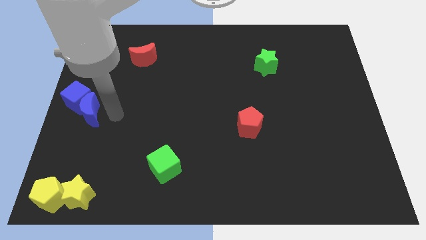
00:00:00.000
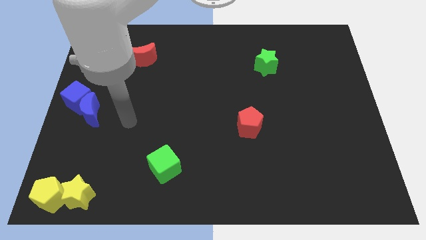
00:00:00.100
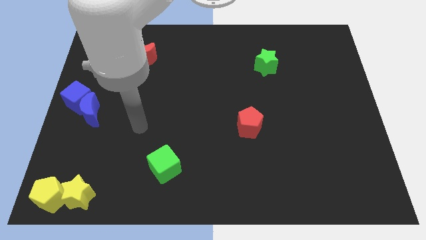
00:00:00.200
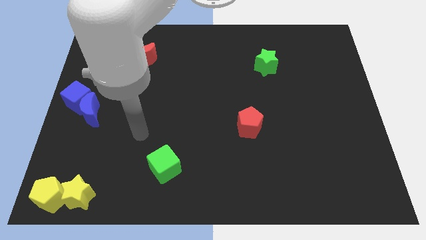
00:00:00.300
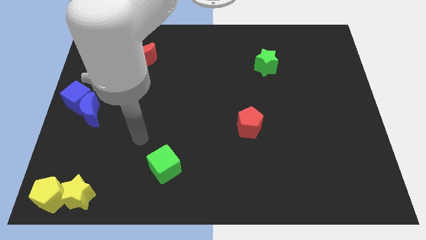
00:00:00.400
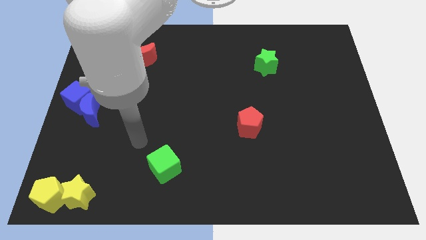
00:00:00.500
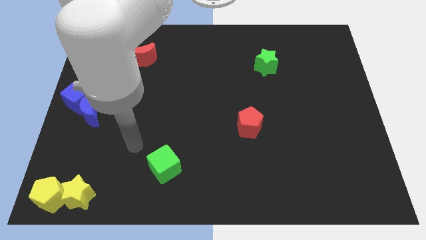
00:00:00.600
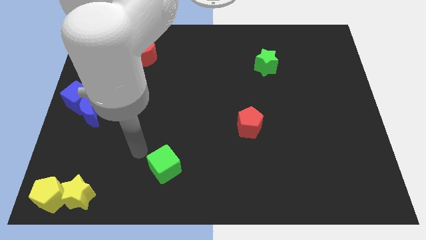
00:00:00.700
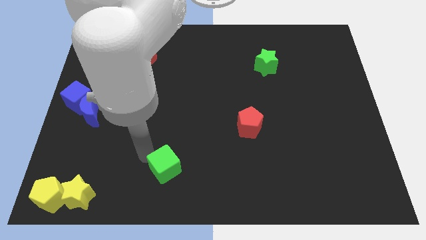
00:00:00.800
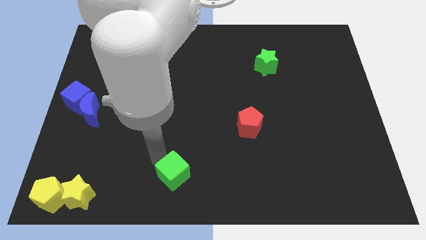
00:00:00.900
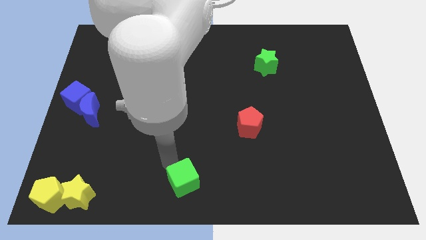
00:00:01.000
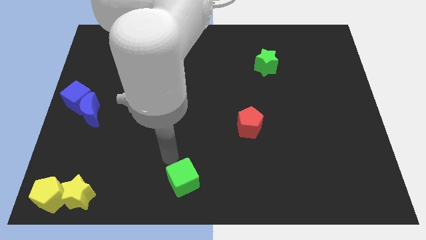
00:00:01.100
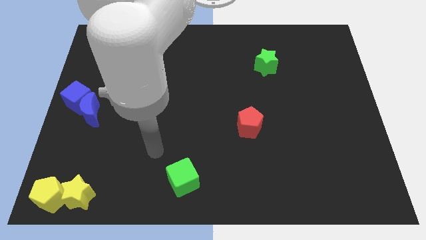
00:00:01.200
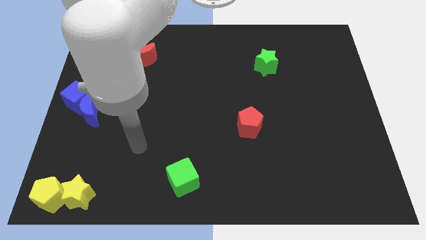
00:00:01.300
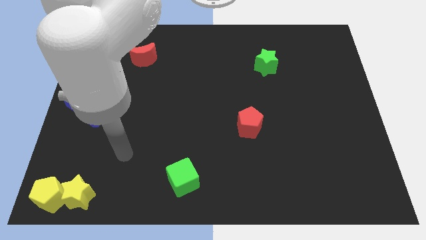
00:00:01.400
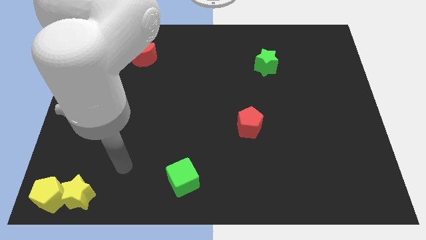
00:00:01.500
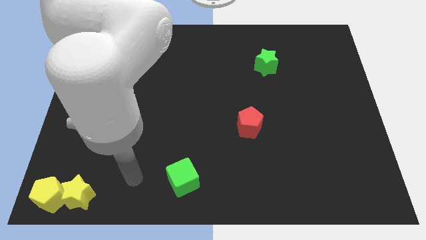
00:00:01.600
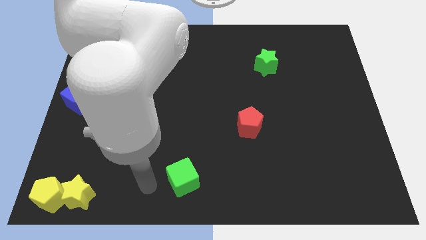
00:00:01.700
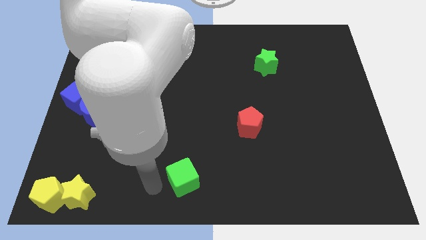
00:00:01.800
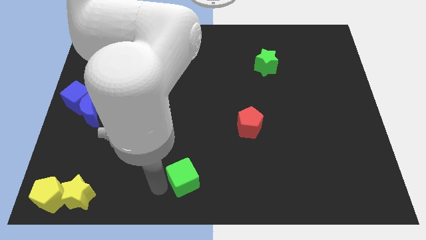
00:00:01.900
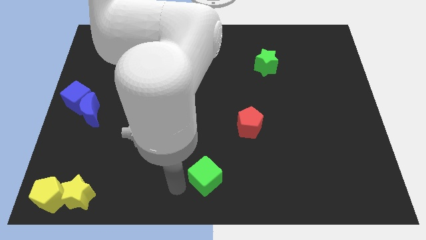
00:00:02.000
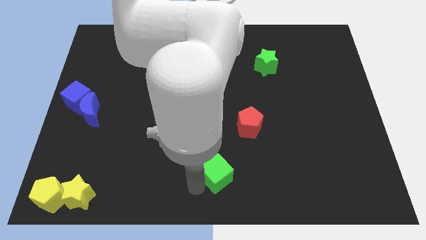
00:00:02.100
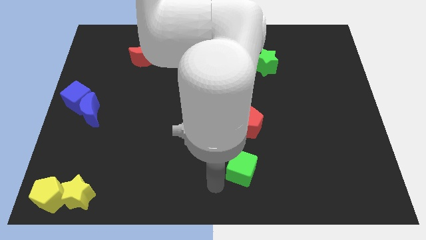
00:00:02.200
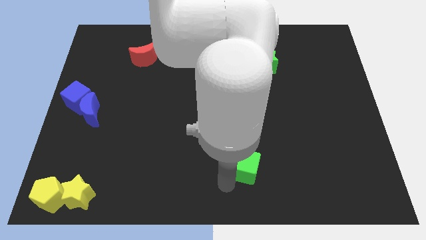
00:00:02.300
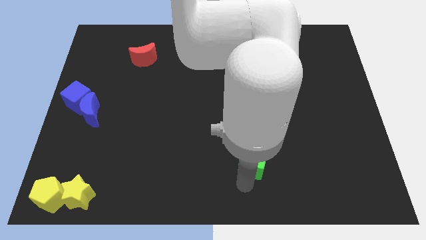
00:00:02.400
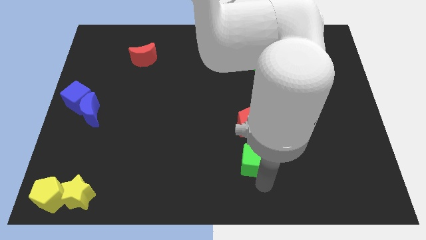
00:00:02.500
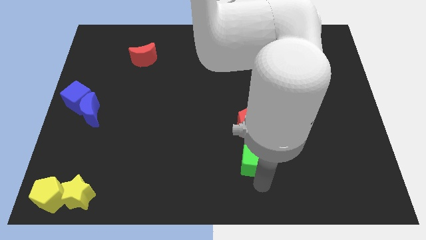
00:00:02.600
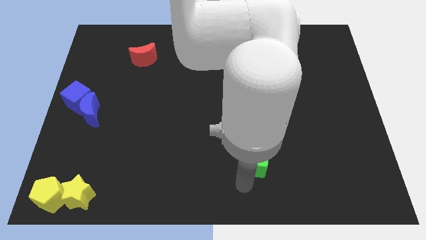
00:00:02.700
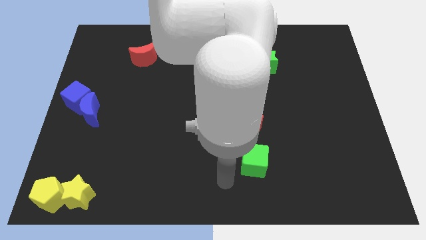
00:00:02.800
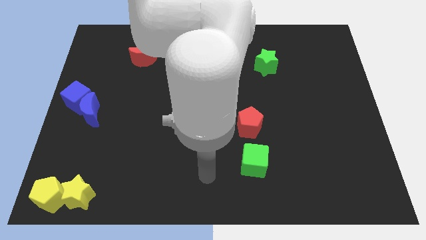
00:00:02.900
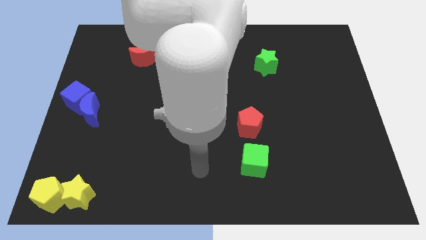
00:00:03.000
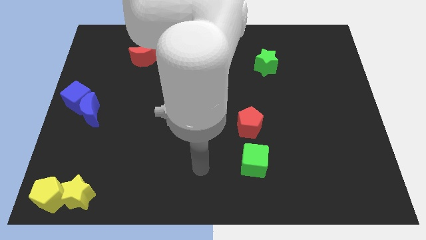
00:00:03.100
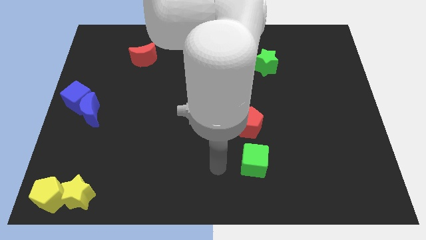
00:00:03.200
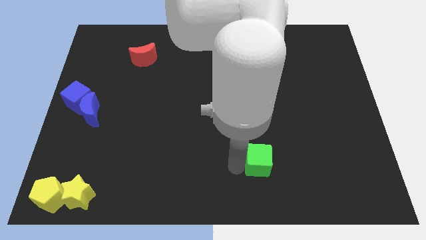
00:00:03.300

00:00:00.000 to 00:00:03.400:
place the green square below the red pentagon

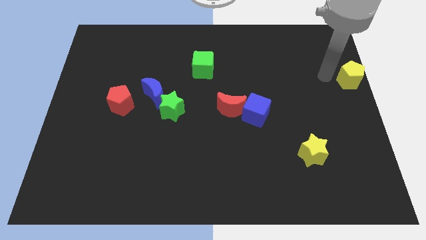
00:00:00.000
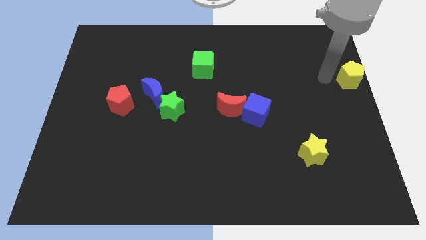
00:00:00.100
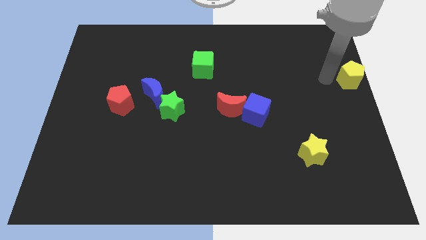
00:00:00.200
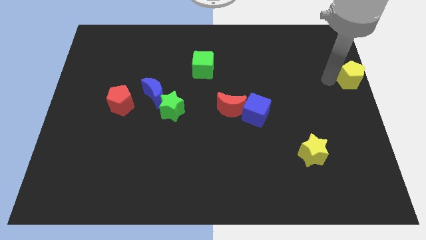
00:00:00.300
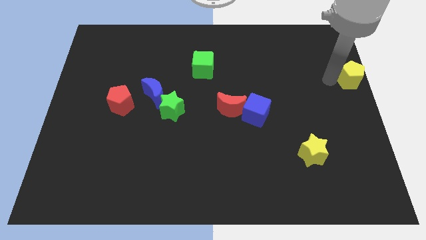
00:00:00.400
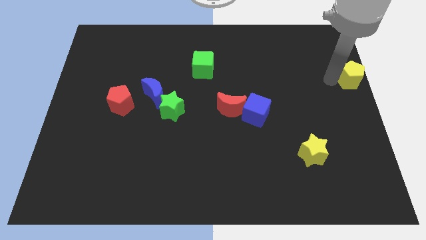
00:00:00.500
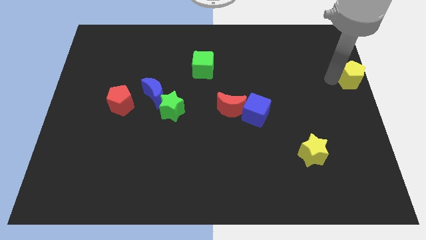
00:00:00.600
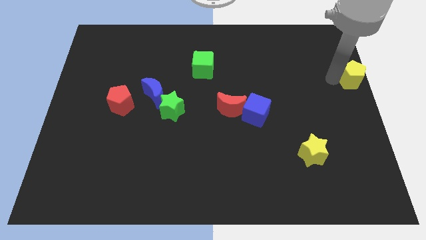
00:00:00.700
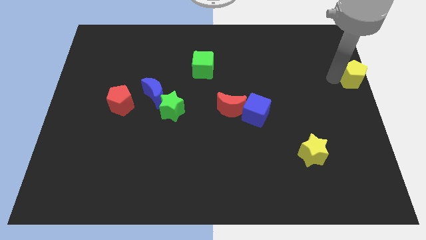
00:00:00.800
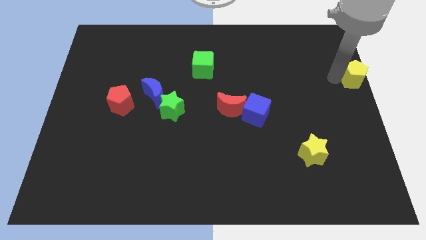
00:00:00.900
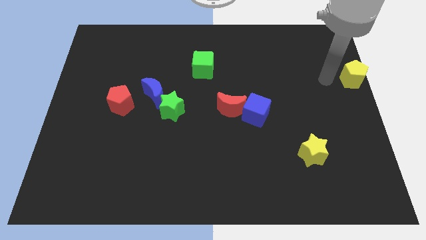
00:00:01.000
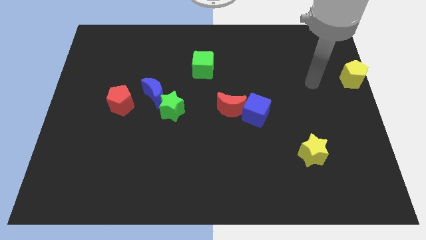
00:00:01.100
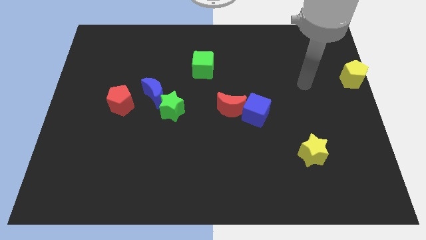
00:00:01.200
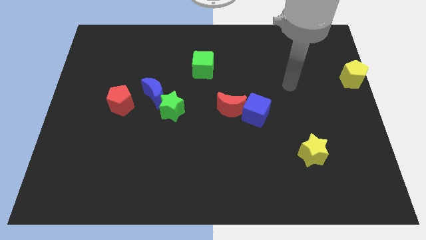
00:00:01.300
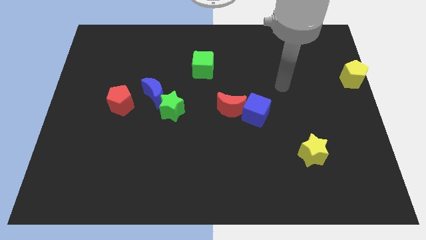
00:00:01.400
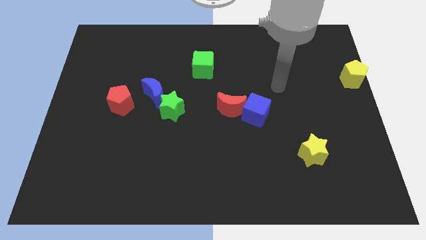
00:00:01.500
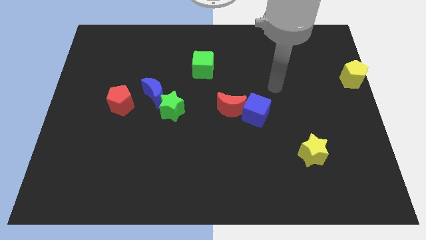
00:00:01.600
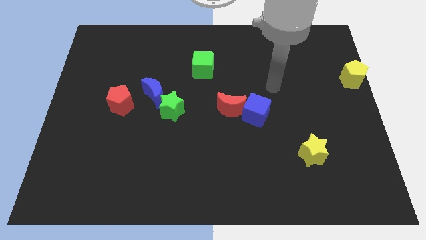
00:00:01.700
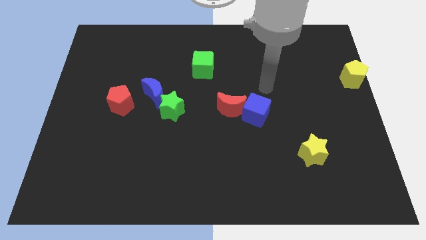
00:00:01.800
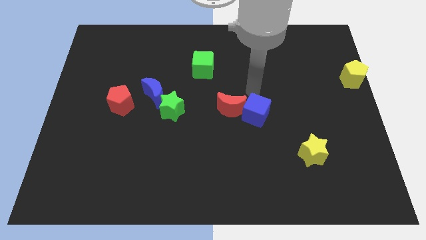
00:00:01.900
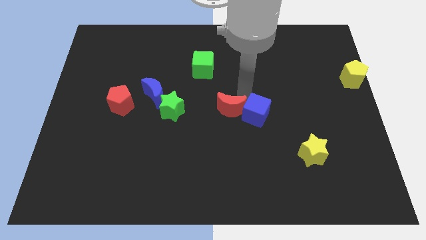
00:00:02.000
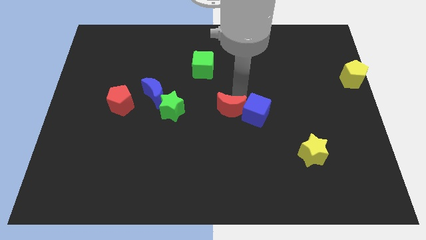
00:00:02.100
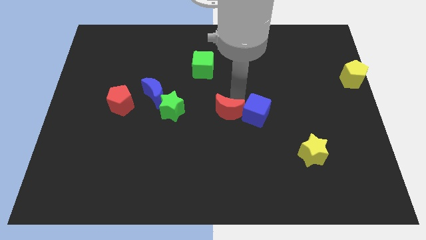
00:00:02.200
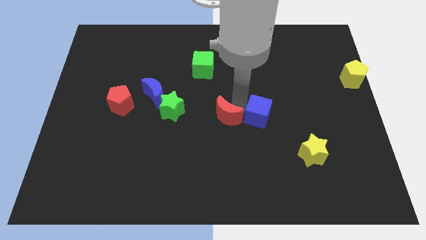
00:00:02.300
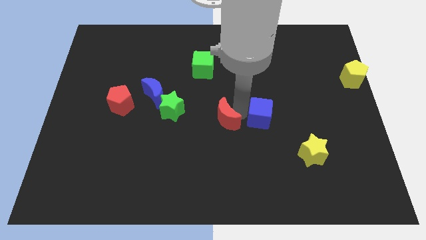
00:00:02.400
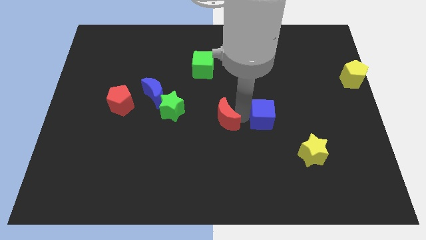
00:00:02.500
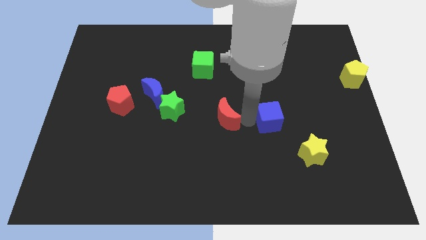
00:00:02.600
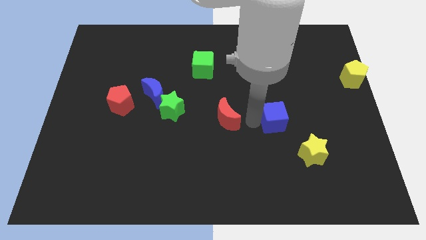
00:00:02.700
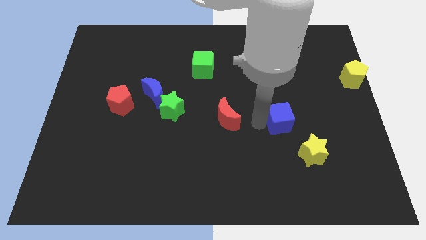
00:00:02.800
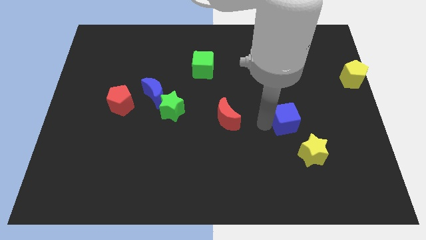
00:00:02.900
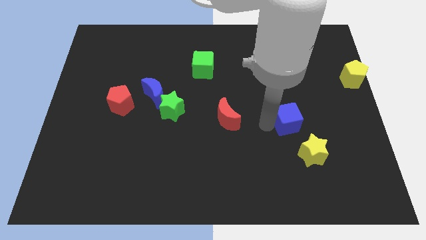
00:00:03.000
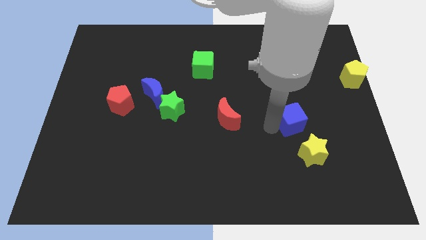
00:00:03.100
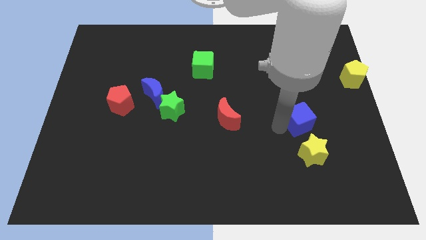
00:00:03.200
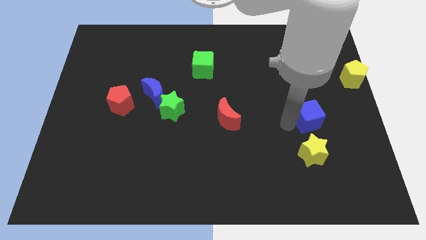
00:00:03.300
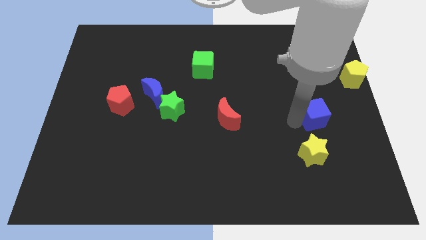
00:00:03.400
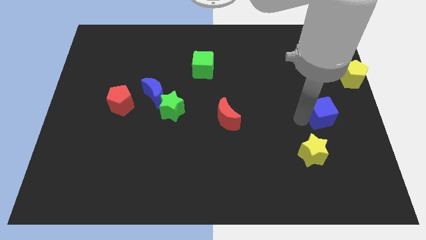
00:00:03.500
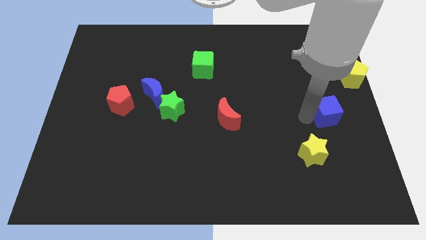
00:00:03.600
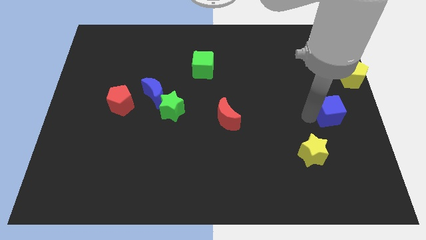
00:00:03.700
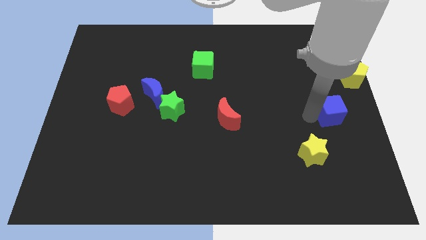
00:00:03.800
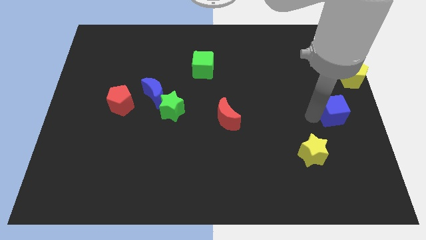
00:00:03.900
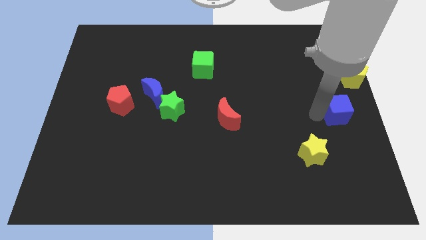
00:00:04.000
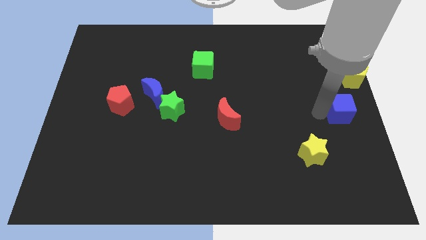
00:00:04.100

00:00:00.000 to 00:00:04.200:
separate the blue cube from the red crescent

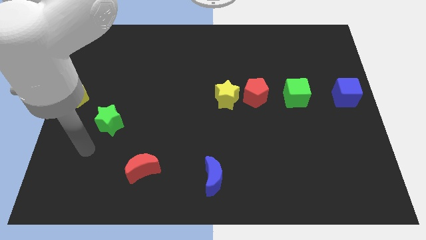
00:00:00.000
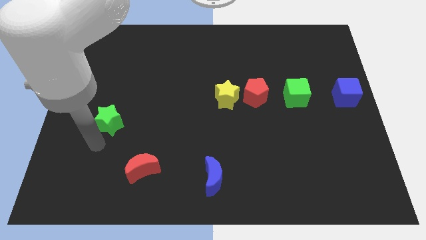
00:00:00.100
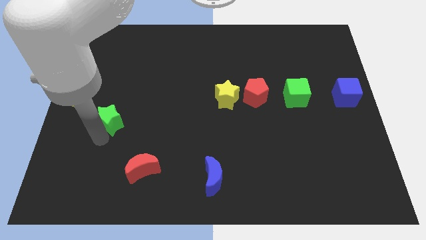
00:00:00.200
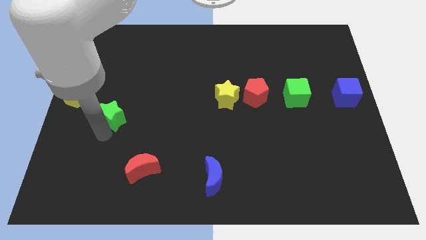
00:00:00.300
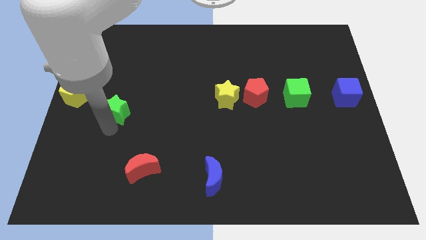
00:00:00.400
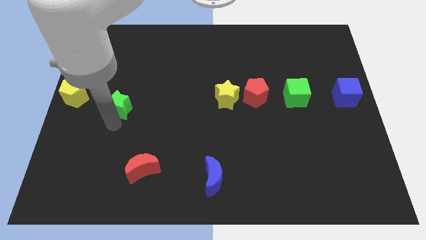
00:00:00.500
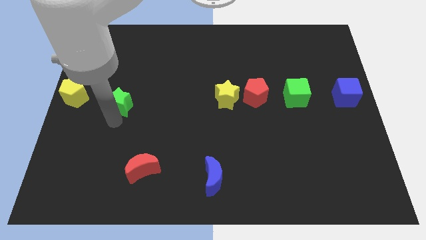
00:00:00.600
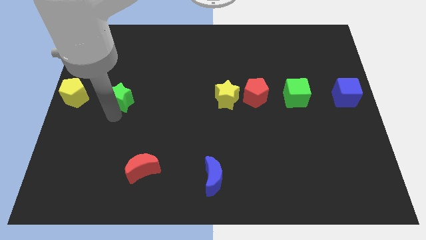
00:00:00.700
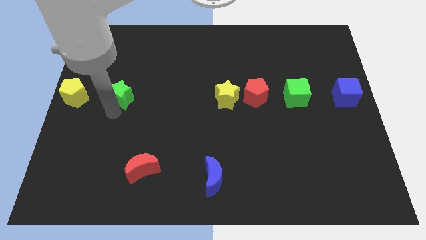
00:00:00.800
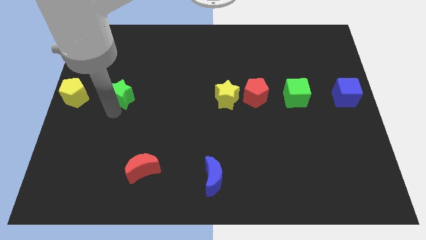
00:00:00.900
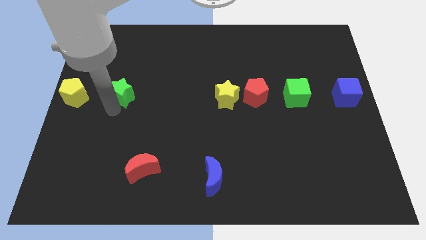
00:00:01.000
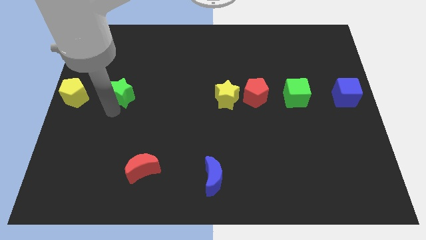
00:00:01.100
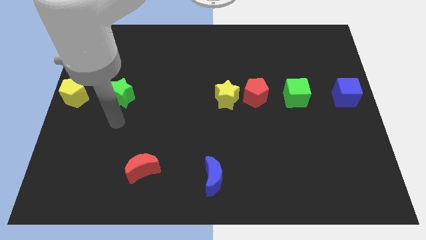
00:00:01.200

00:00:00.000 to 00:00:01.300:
push the green star to the right side of the yellow pentagon

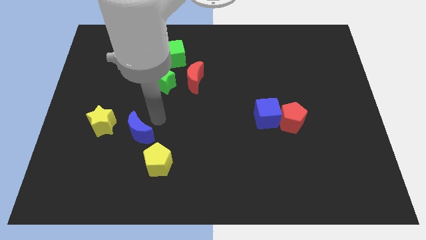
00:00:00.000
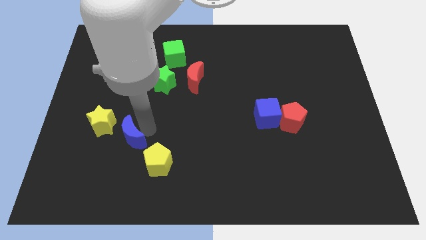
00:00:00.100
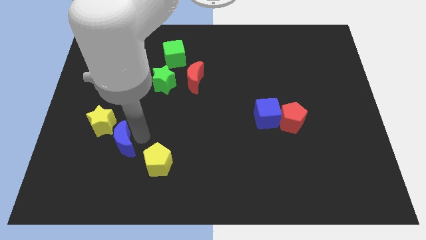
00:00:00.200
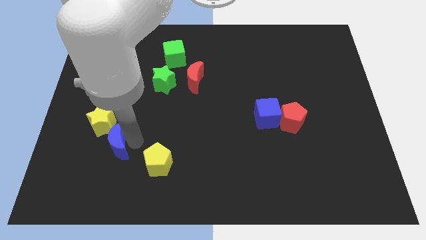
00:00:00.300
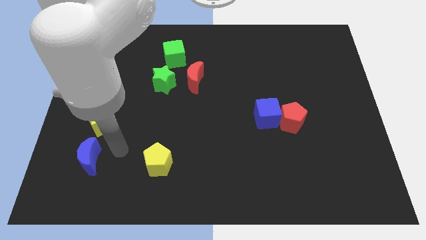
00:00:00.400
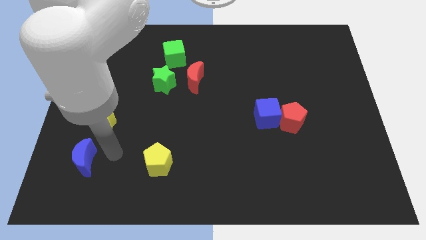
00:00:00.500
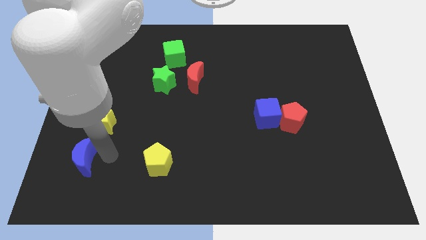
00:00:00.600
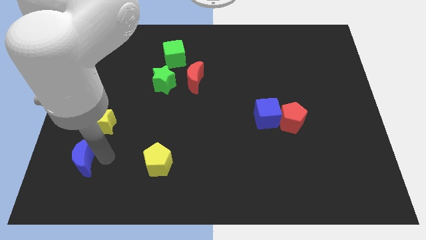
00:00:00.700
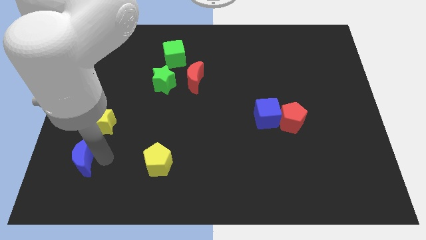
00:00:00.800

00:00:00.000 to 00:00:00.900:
place the blue moon below the yellow star
